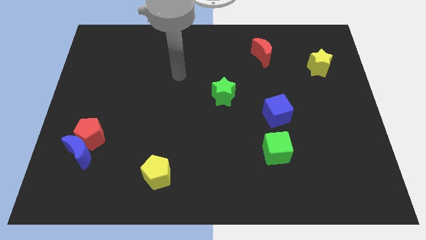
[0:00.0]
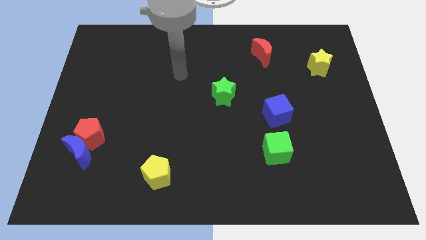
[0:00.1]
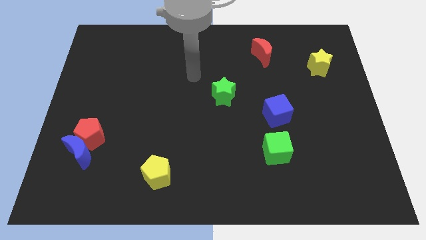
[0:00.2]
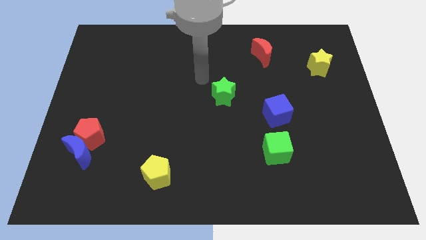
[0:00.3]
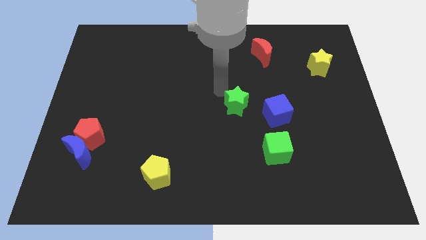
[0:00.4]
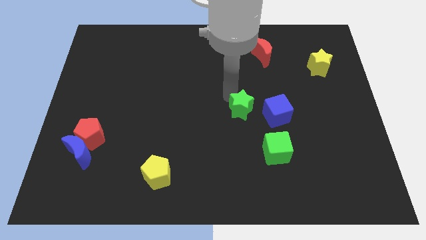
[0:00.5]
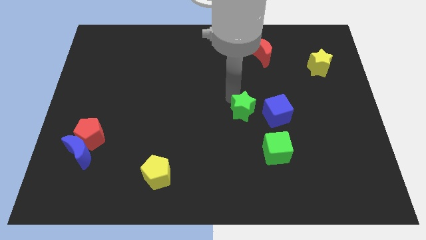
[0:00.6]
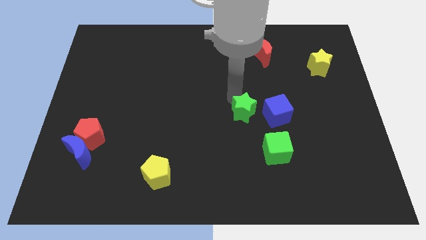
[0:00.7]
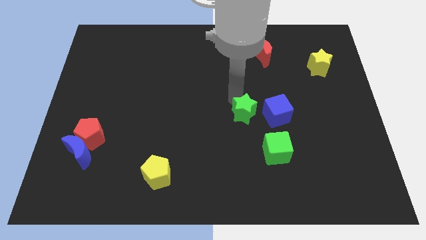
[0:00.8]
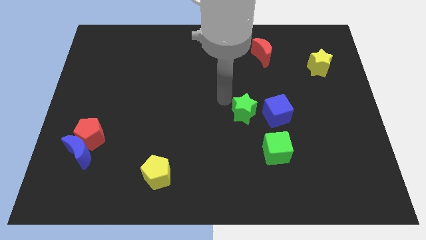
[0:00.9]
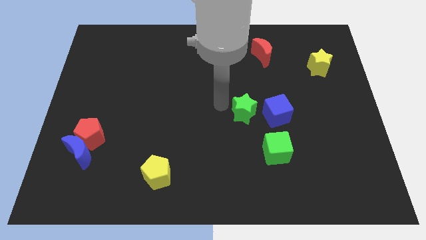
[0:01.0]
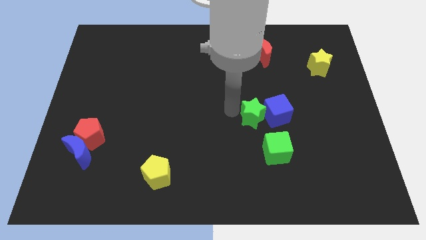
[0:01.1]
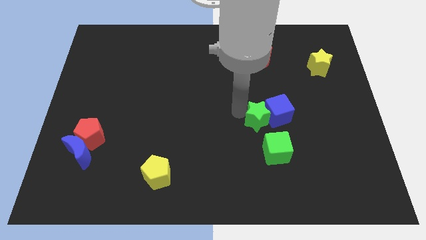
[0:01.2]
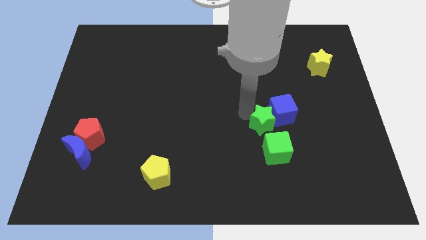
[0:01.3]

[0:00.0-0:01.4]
slide the green star to the blue cube

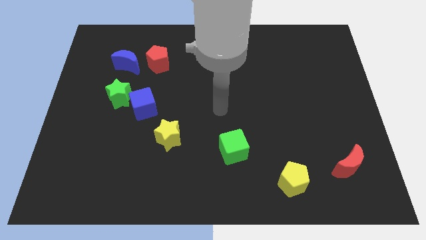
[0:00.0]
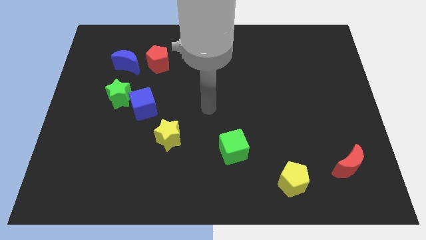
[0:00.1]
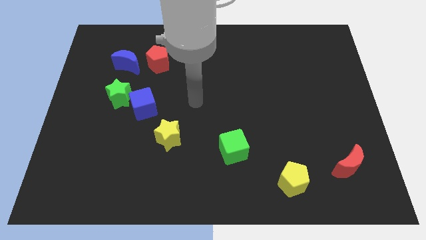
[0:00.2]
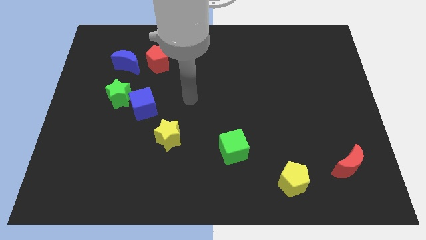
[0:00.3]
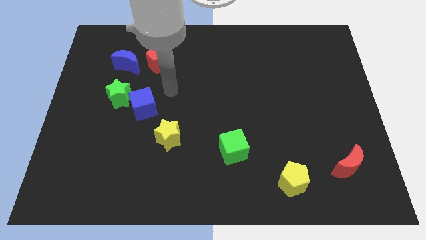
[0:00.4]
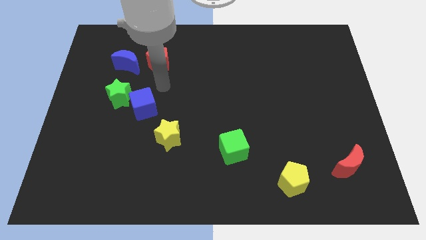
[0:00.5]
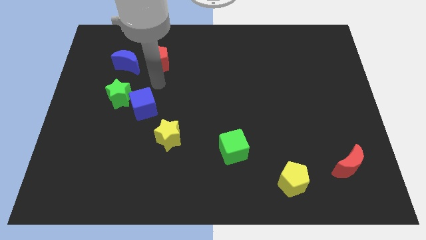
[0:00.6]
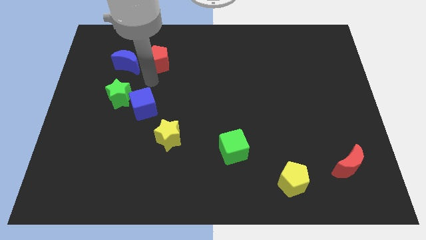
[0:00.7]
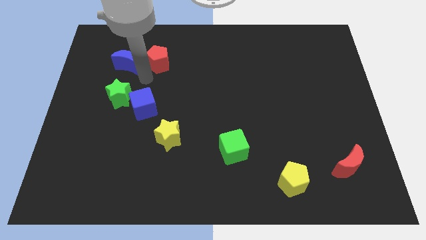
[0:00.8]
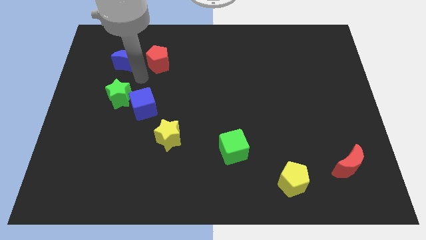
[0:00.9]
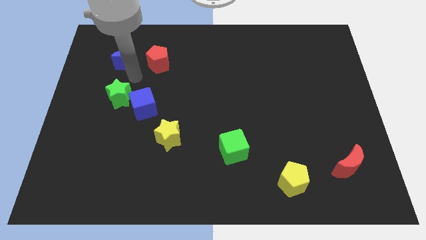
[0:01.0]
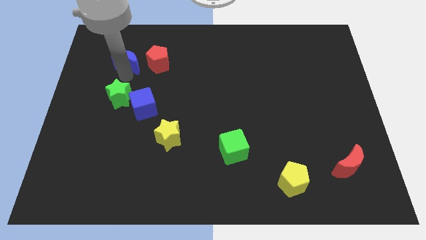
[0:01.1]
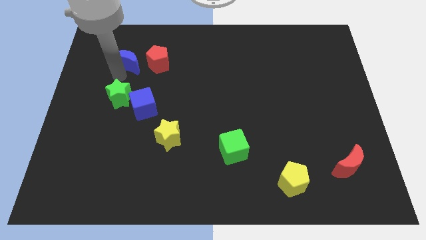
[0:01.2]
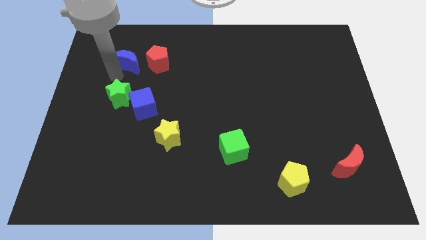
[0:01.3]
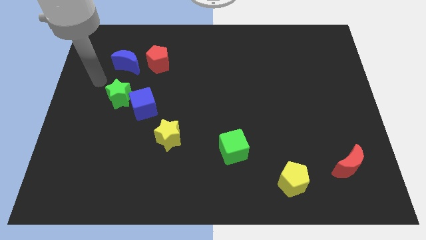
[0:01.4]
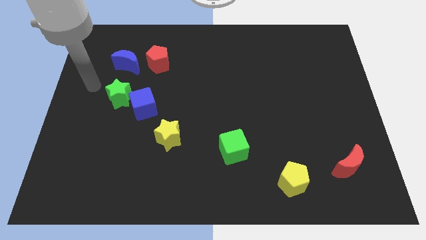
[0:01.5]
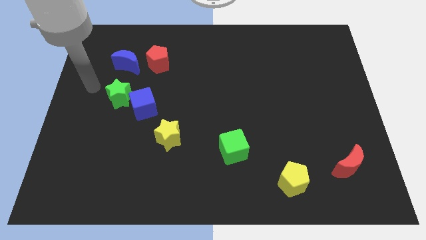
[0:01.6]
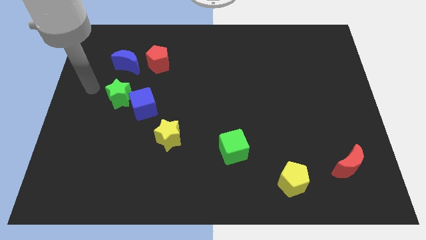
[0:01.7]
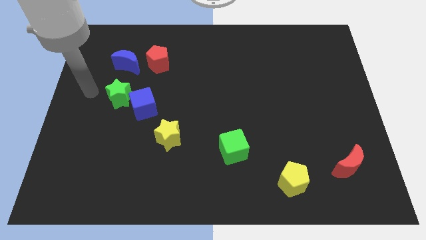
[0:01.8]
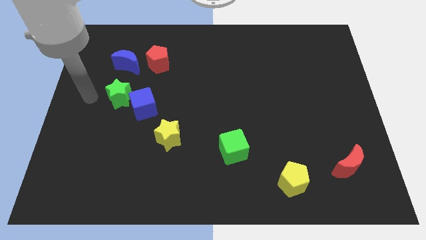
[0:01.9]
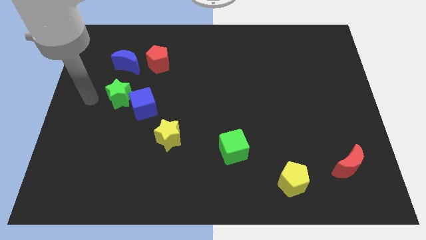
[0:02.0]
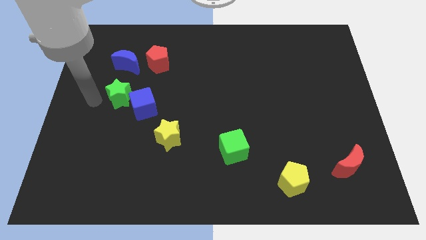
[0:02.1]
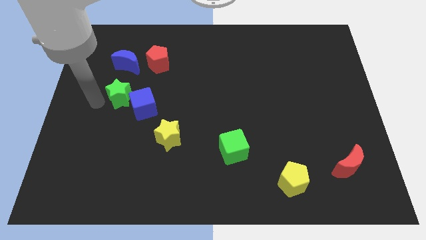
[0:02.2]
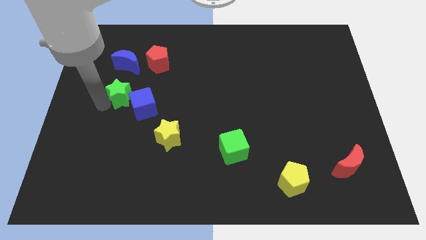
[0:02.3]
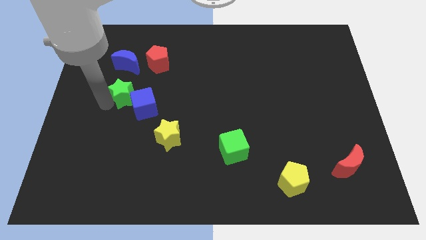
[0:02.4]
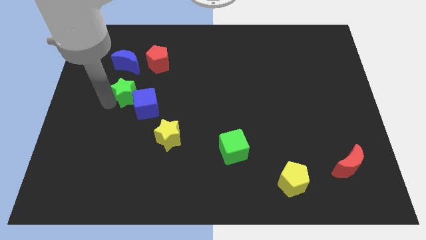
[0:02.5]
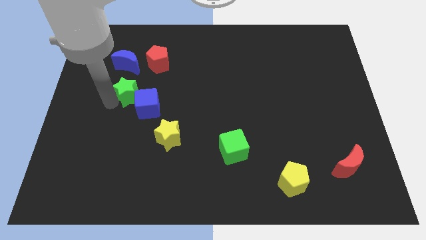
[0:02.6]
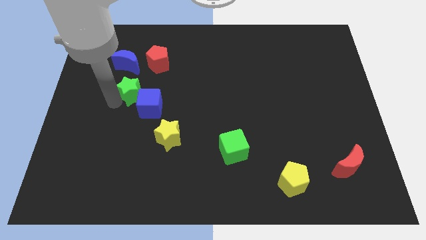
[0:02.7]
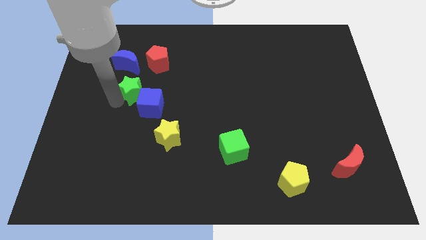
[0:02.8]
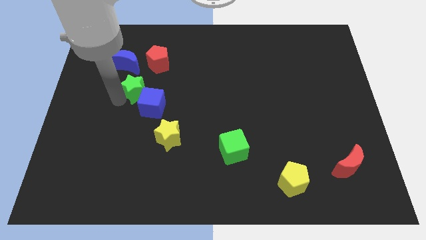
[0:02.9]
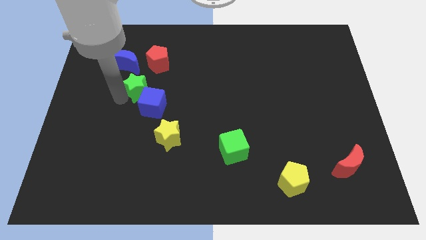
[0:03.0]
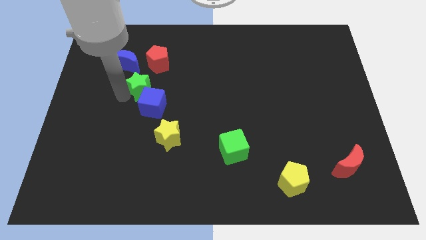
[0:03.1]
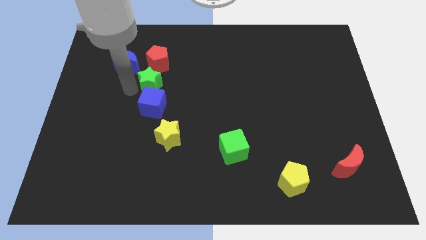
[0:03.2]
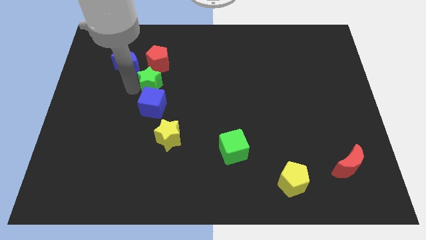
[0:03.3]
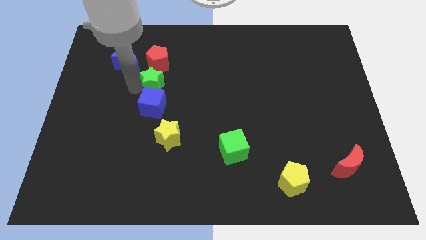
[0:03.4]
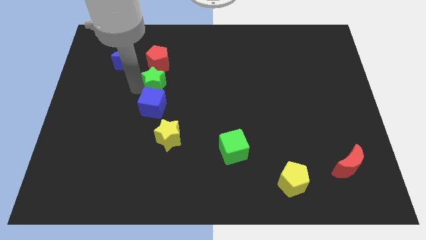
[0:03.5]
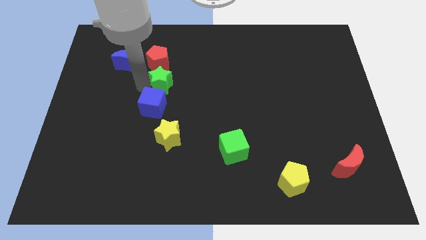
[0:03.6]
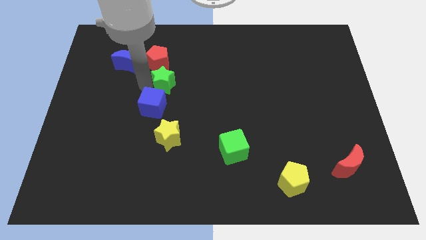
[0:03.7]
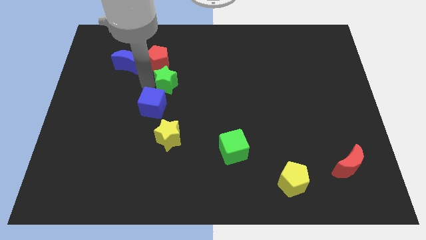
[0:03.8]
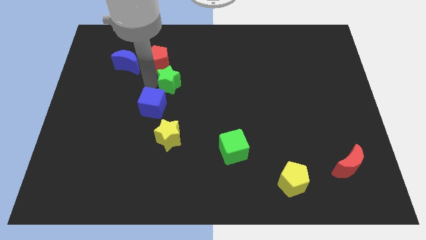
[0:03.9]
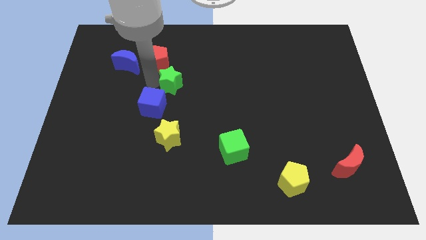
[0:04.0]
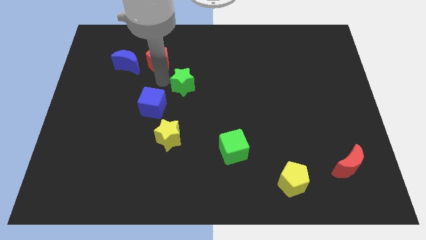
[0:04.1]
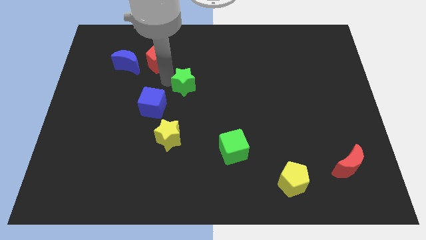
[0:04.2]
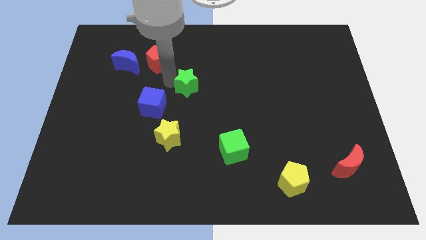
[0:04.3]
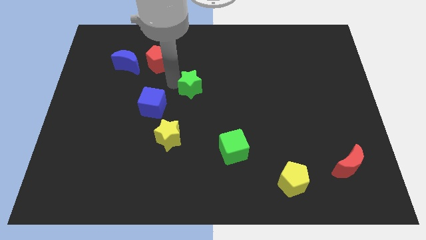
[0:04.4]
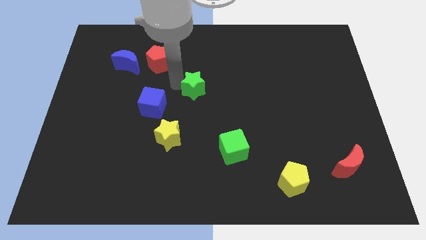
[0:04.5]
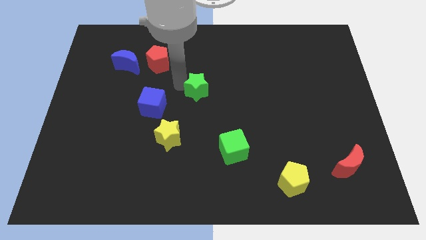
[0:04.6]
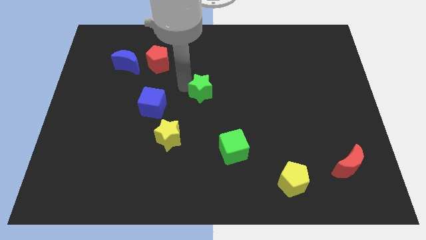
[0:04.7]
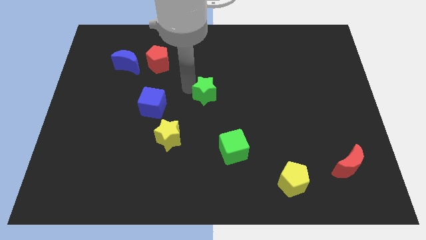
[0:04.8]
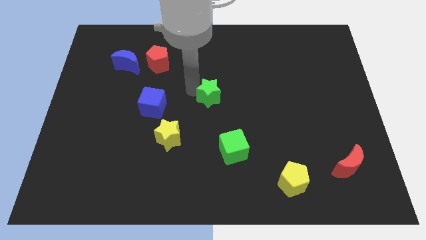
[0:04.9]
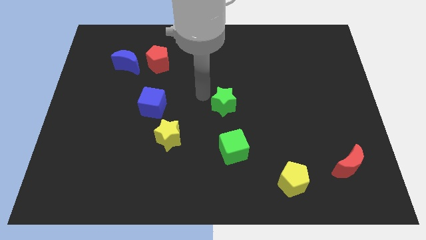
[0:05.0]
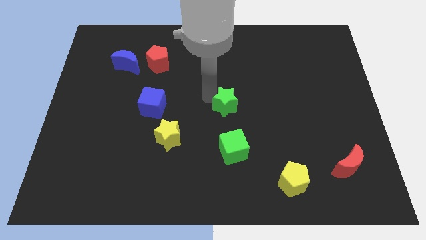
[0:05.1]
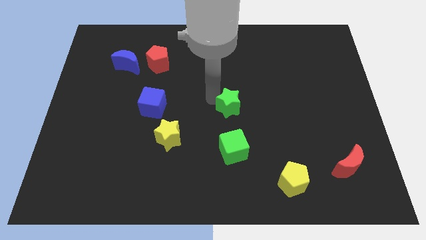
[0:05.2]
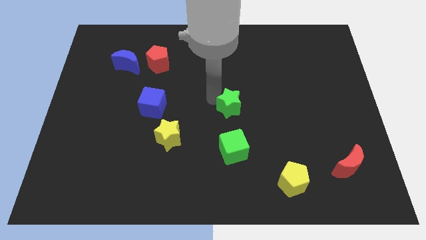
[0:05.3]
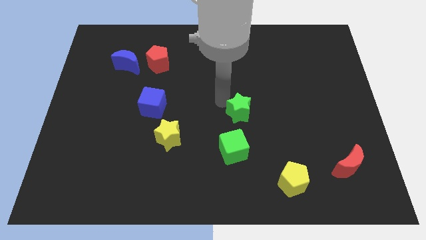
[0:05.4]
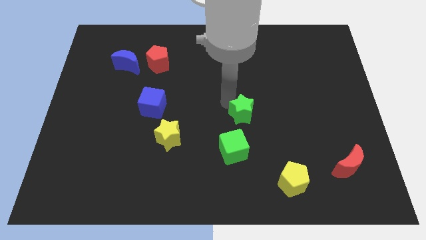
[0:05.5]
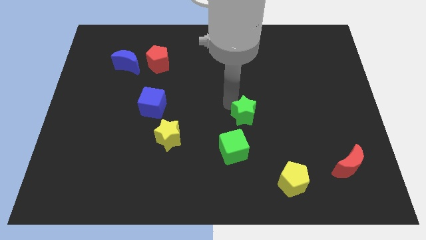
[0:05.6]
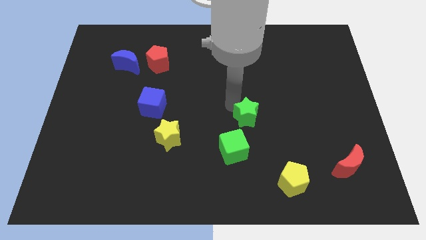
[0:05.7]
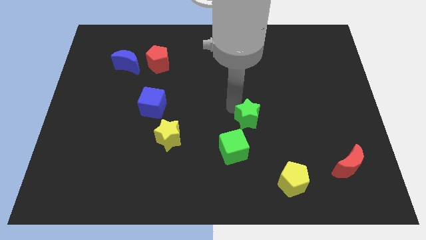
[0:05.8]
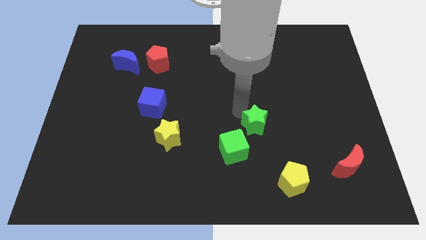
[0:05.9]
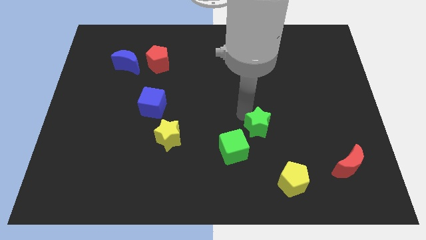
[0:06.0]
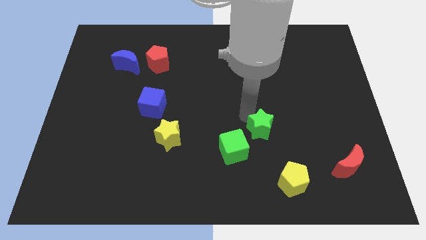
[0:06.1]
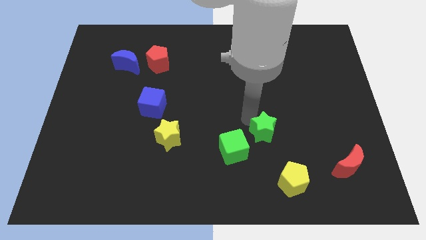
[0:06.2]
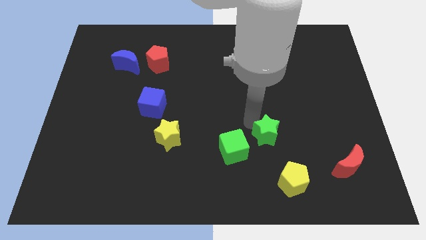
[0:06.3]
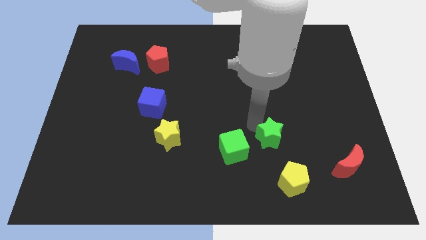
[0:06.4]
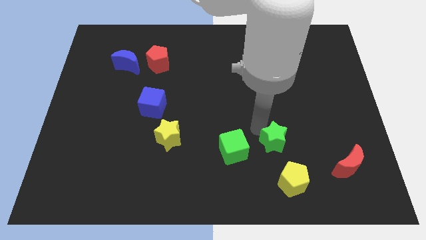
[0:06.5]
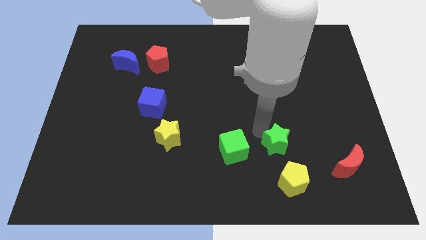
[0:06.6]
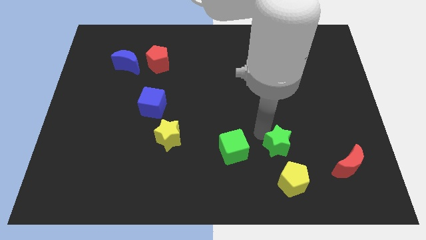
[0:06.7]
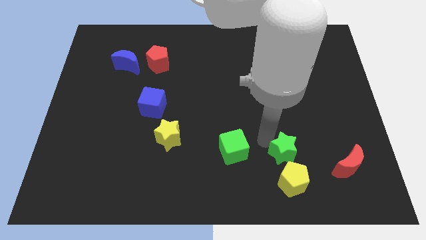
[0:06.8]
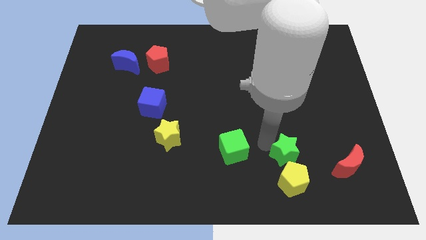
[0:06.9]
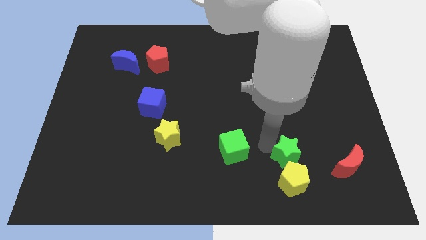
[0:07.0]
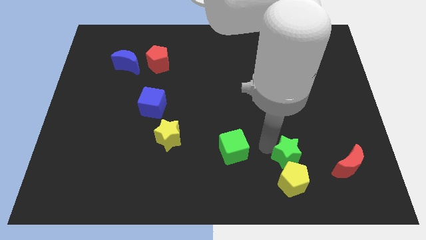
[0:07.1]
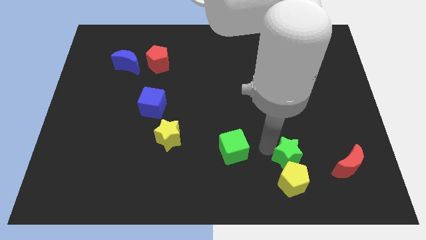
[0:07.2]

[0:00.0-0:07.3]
put the green star close to the yellow pentagon
